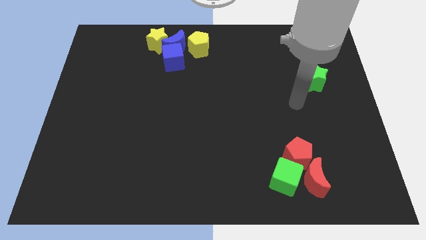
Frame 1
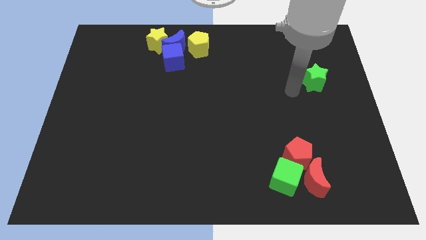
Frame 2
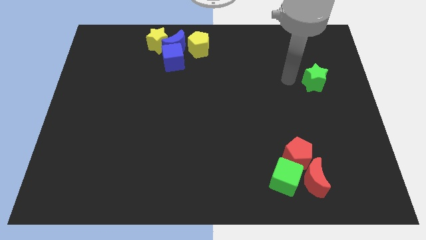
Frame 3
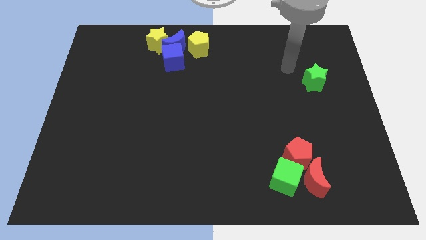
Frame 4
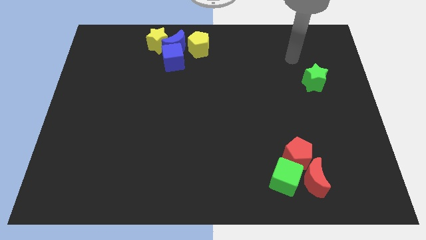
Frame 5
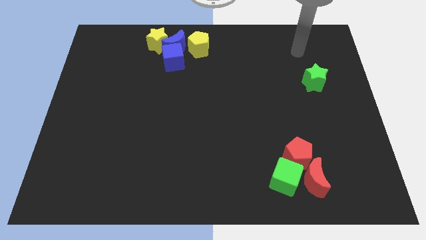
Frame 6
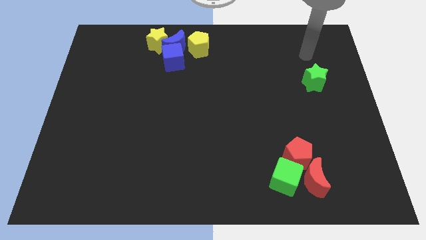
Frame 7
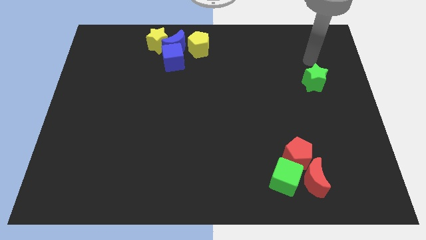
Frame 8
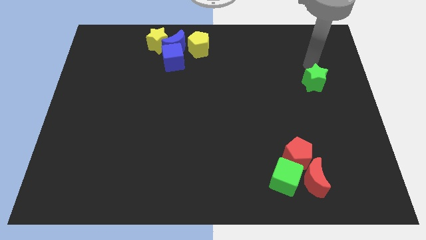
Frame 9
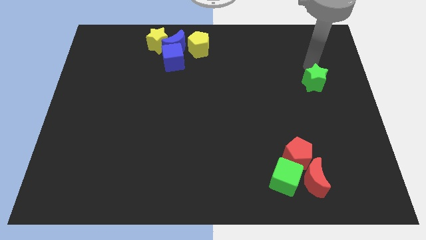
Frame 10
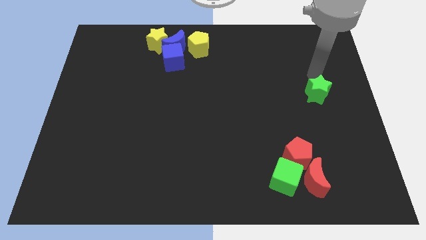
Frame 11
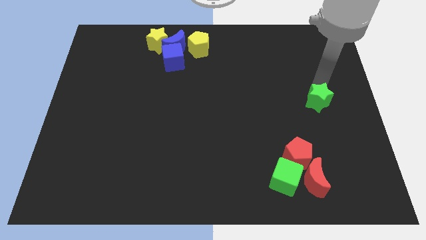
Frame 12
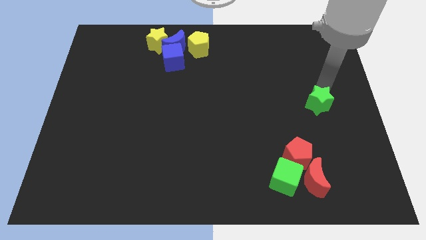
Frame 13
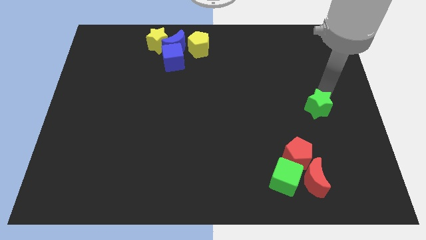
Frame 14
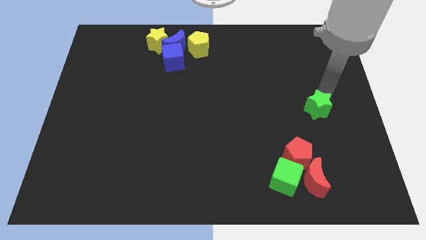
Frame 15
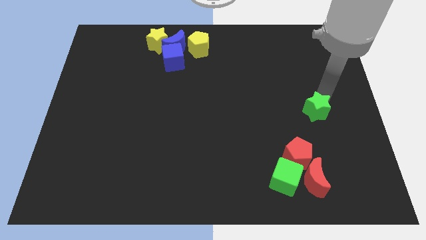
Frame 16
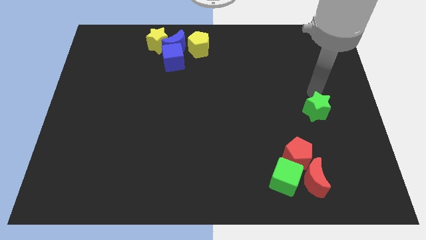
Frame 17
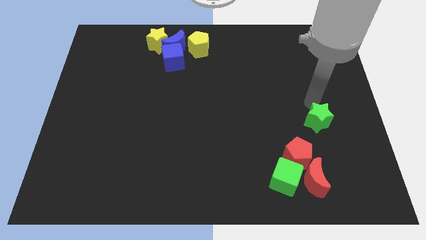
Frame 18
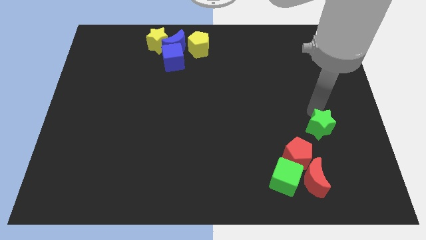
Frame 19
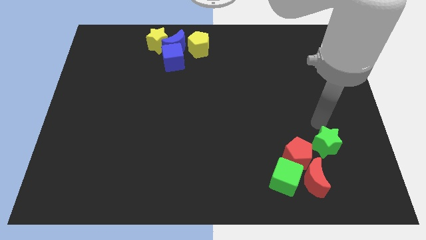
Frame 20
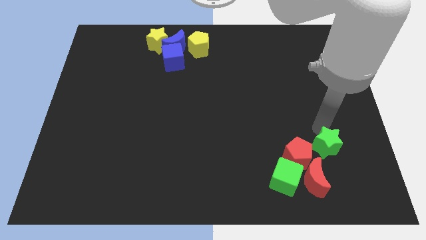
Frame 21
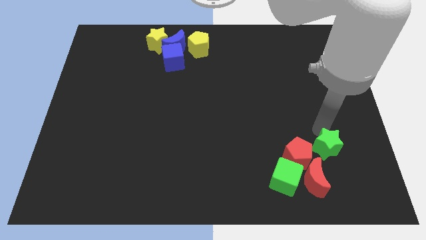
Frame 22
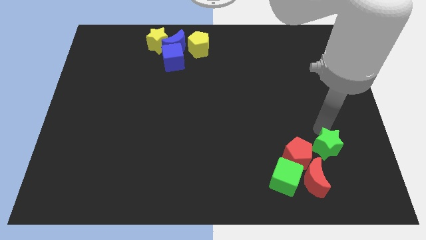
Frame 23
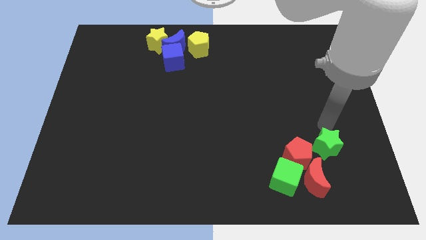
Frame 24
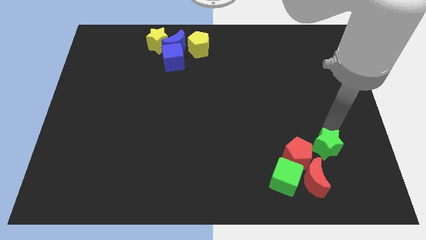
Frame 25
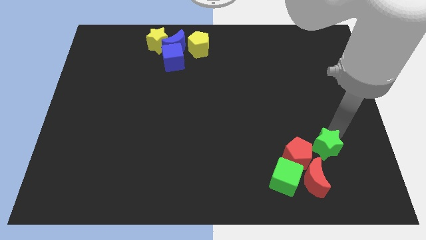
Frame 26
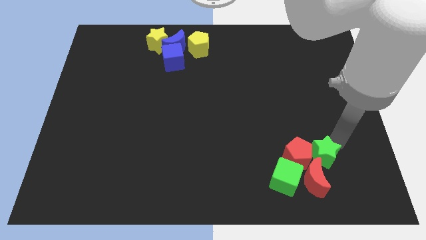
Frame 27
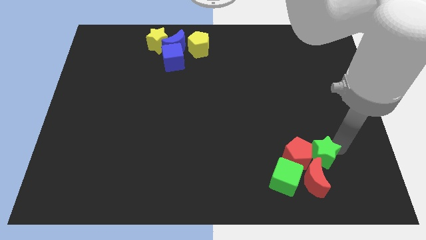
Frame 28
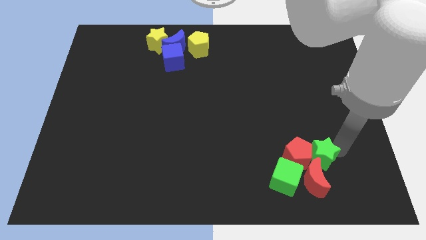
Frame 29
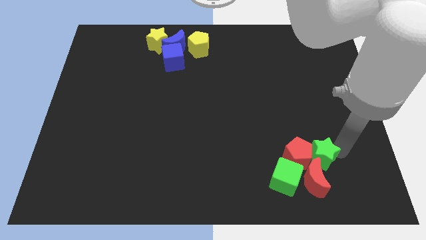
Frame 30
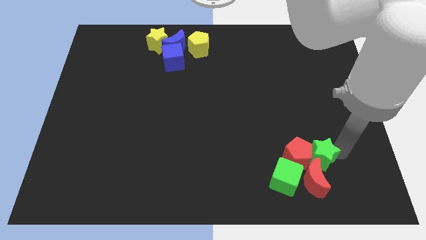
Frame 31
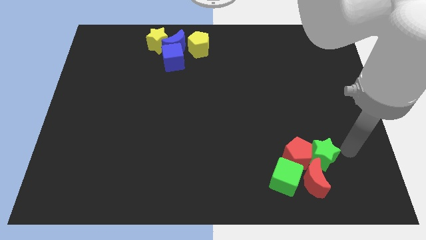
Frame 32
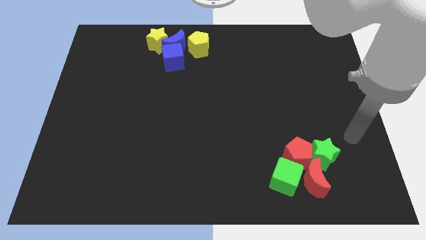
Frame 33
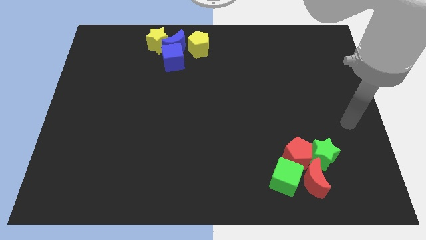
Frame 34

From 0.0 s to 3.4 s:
place green star with group of blocks together

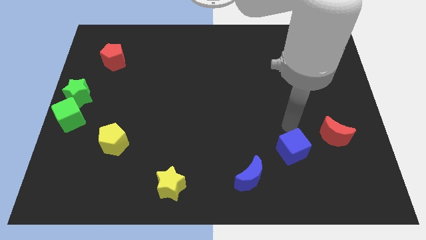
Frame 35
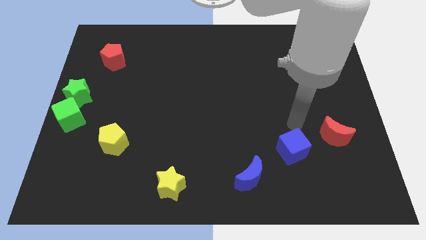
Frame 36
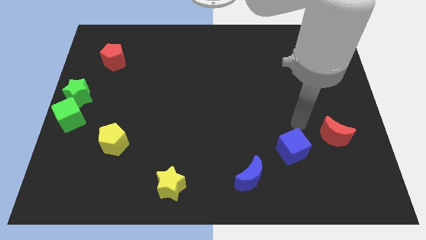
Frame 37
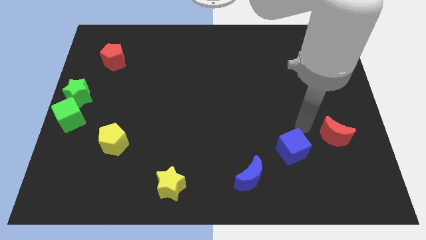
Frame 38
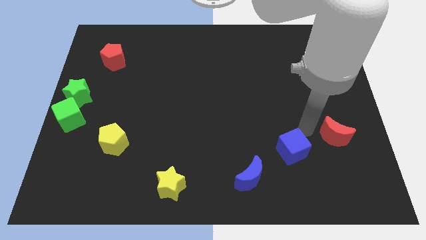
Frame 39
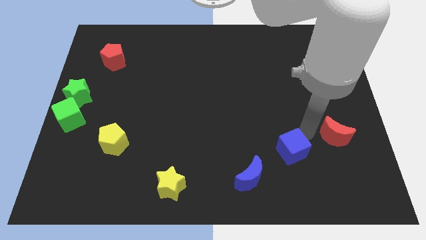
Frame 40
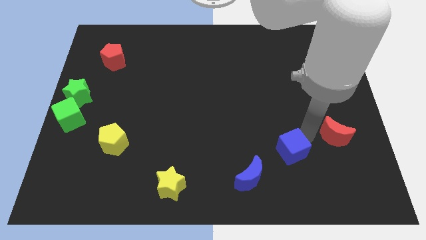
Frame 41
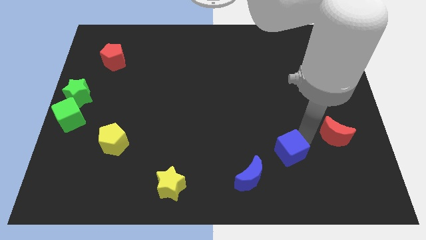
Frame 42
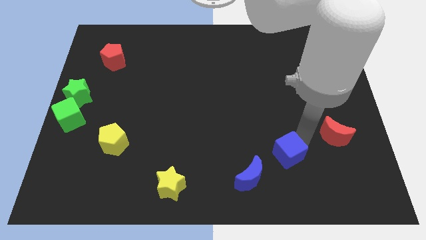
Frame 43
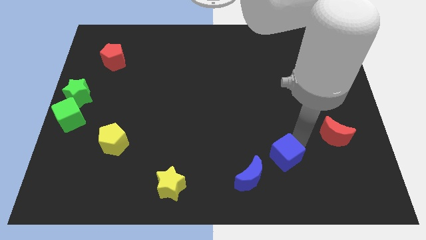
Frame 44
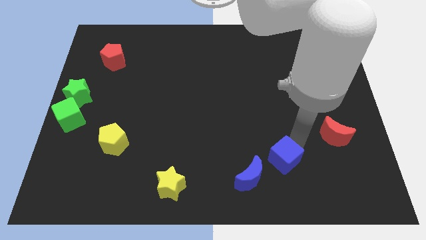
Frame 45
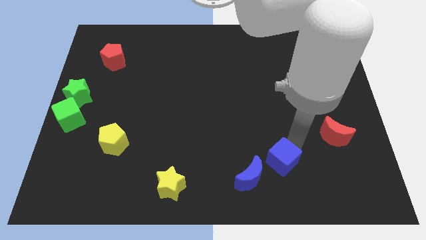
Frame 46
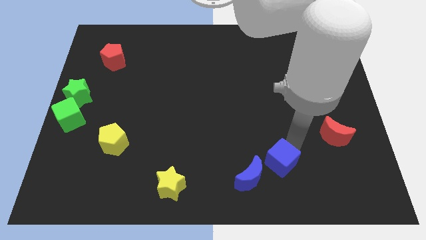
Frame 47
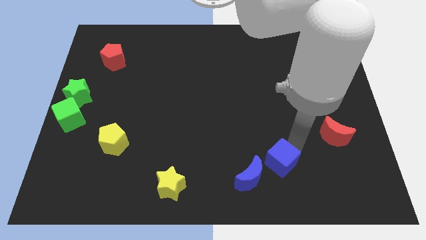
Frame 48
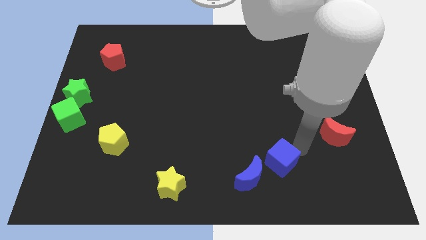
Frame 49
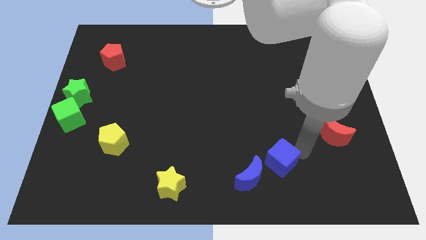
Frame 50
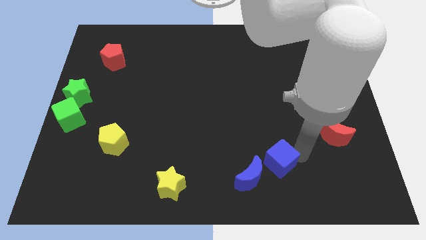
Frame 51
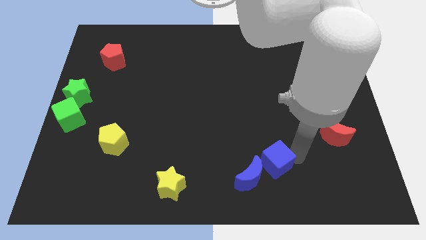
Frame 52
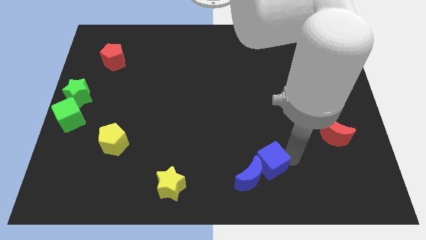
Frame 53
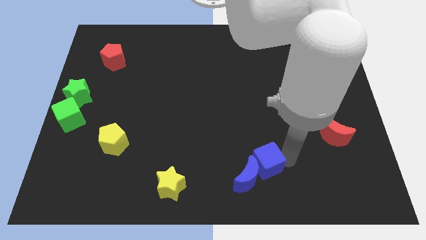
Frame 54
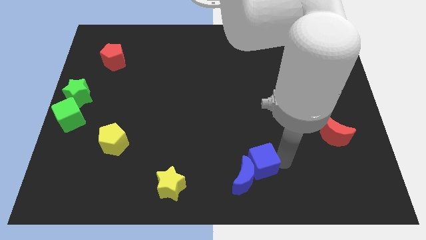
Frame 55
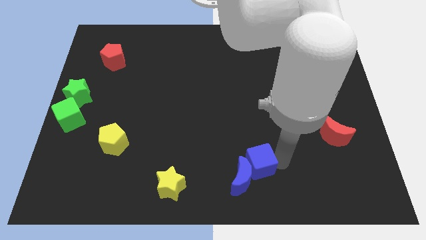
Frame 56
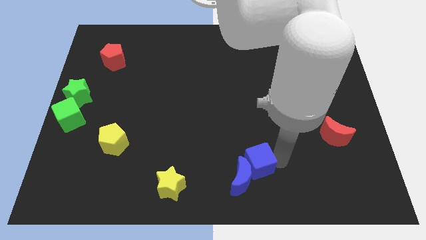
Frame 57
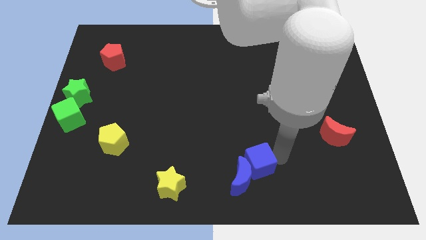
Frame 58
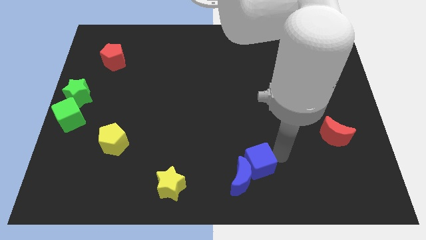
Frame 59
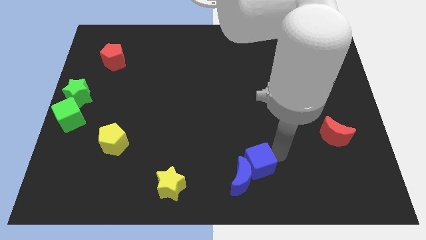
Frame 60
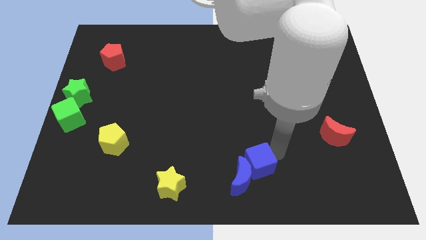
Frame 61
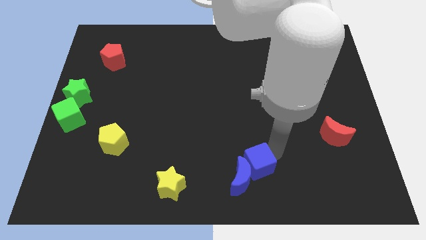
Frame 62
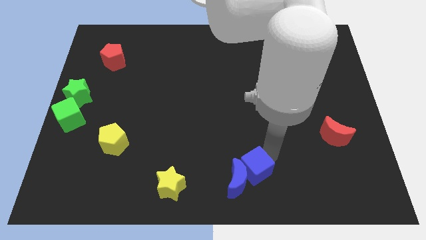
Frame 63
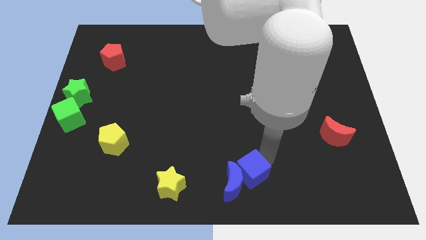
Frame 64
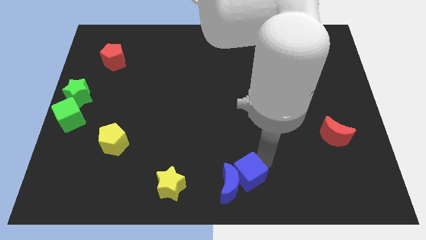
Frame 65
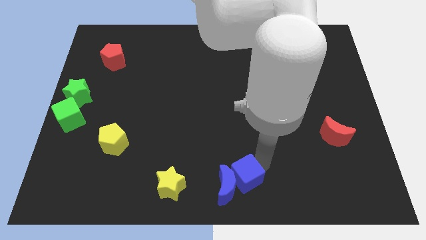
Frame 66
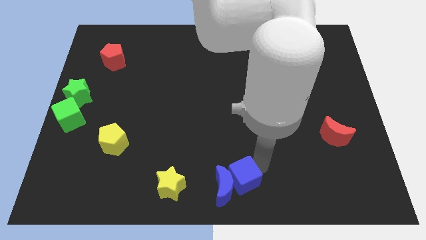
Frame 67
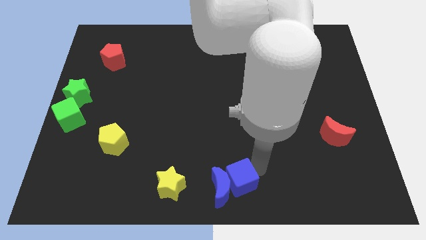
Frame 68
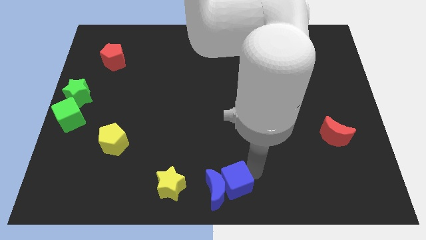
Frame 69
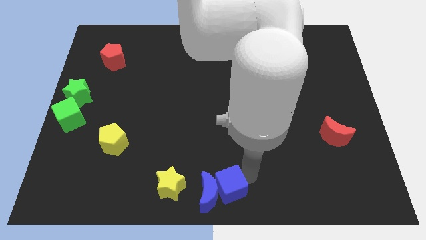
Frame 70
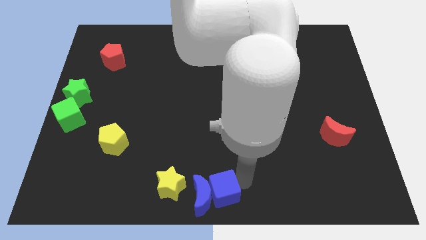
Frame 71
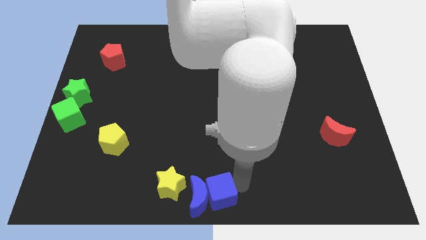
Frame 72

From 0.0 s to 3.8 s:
move blue cube into blue crescent

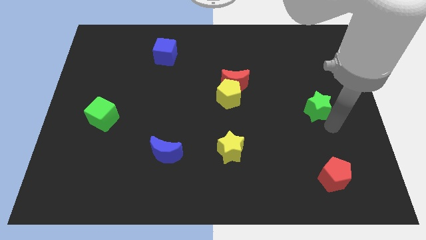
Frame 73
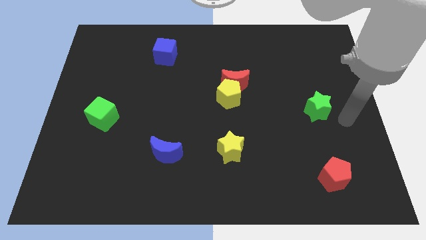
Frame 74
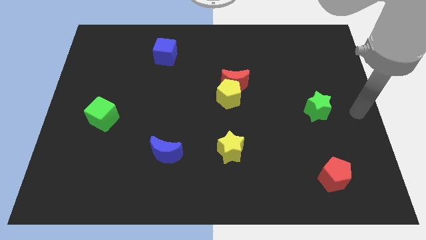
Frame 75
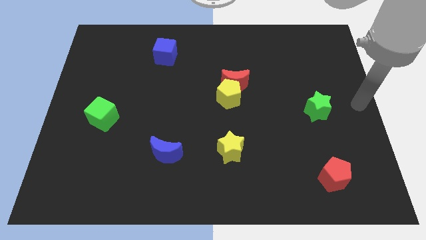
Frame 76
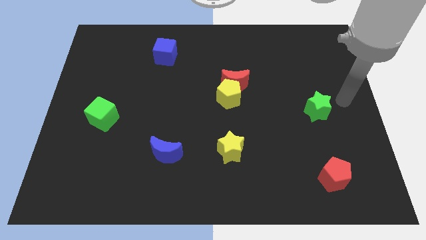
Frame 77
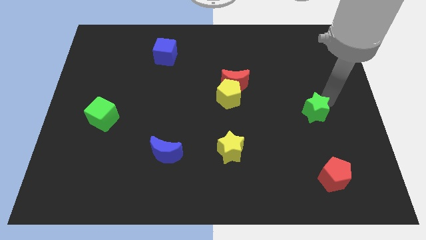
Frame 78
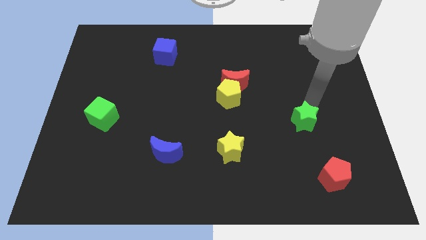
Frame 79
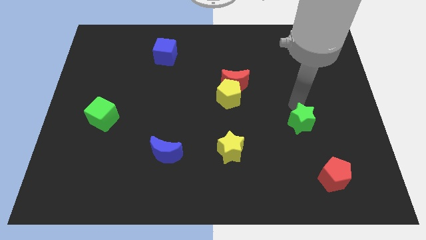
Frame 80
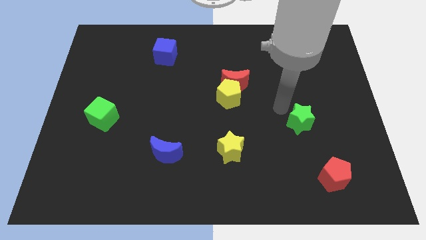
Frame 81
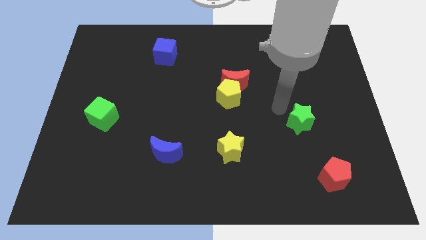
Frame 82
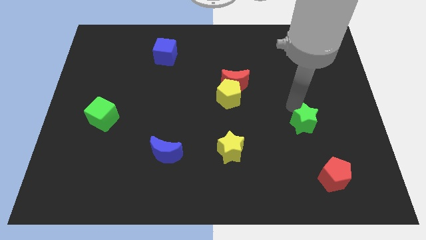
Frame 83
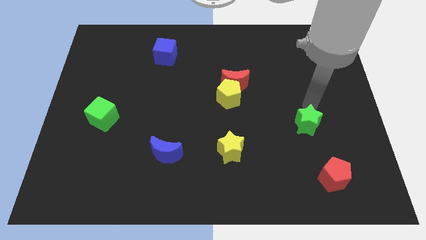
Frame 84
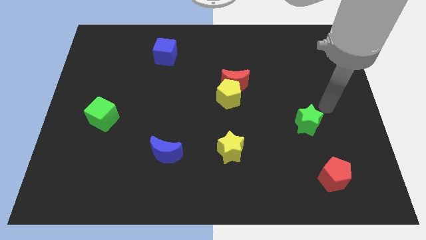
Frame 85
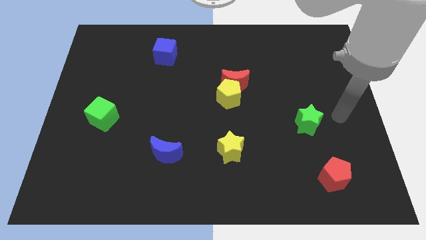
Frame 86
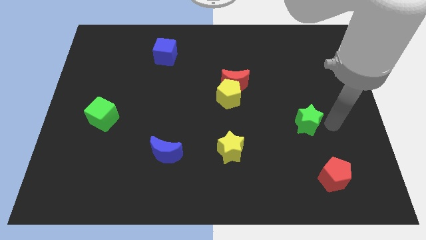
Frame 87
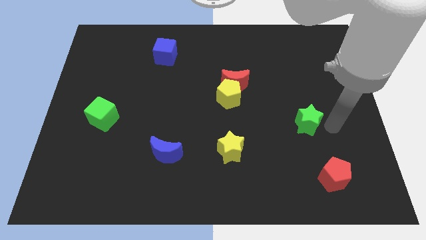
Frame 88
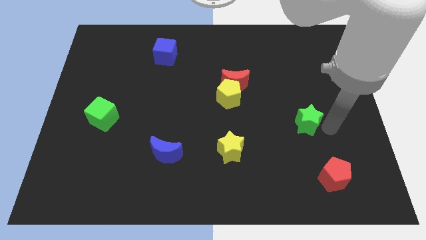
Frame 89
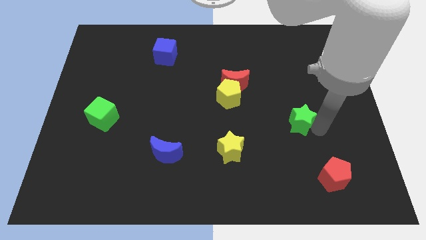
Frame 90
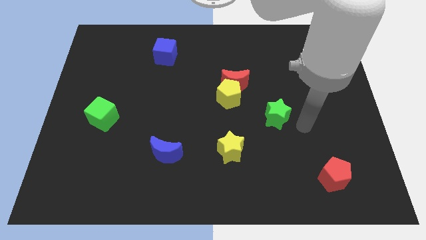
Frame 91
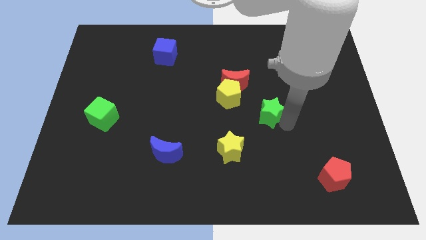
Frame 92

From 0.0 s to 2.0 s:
place the green star in between the yellow pentagon and red pentagon
